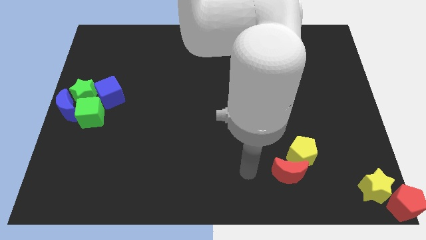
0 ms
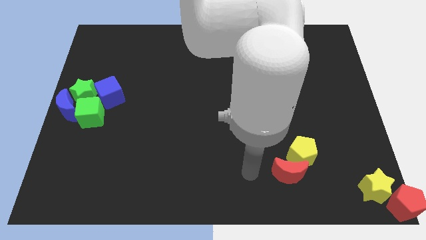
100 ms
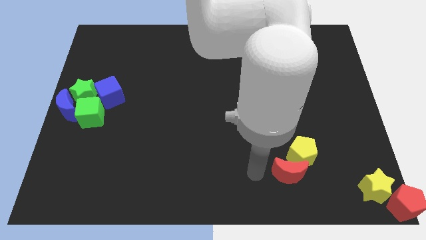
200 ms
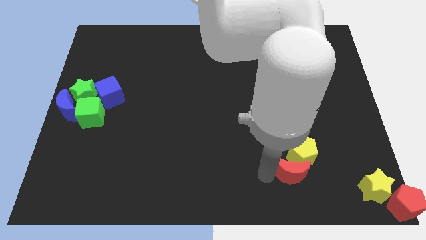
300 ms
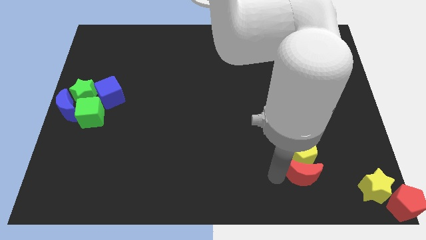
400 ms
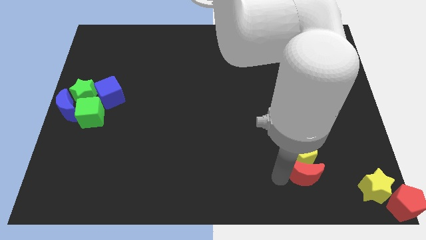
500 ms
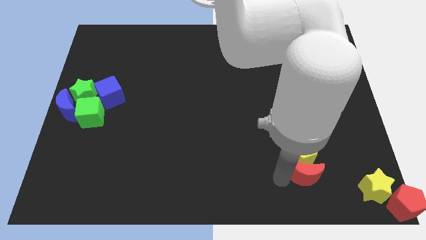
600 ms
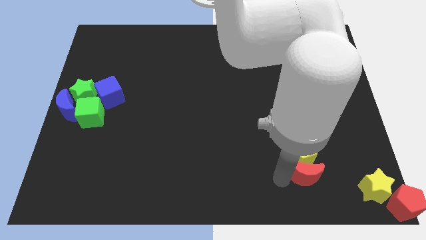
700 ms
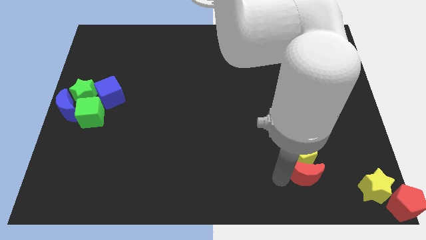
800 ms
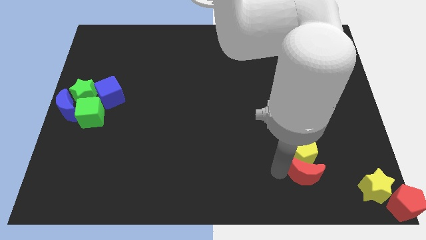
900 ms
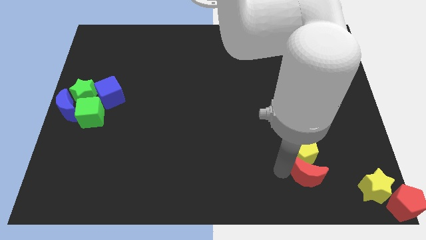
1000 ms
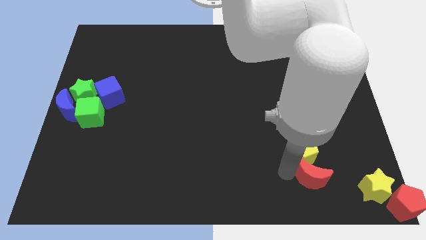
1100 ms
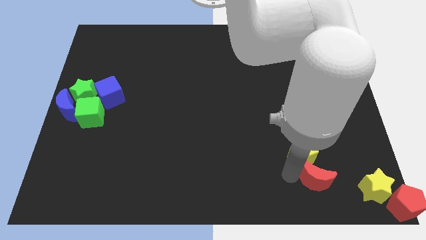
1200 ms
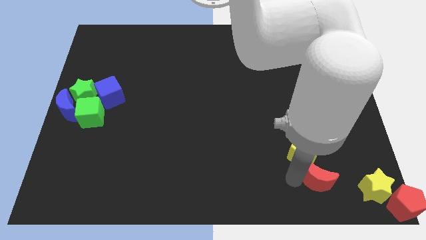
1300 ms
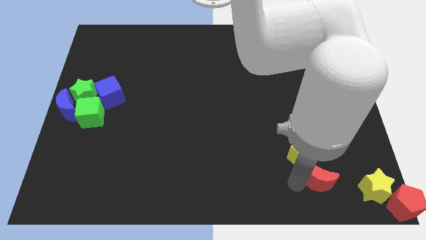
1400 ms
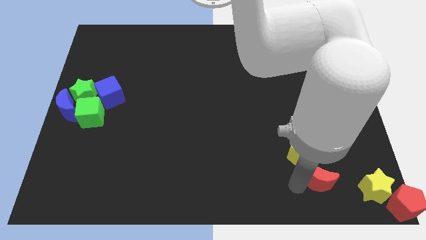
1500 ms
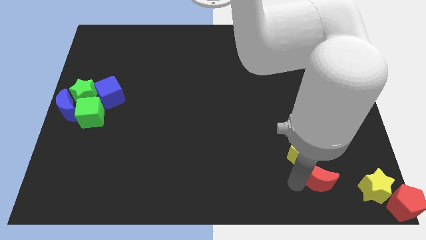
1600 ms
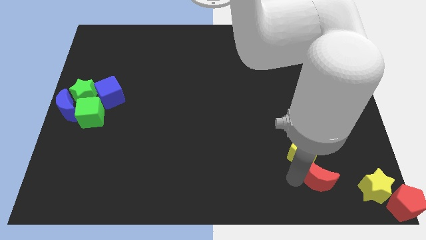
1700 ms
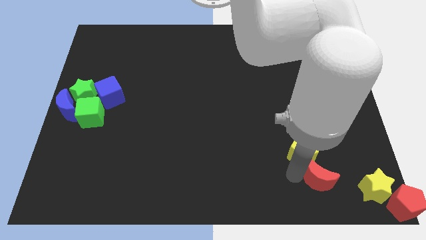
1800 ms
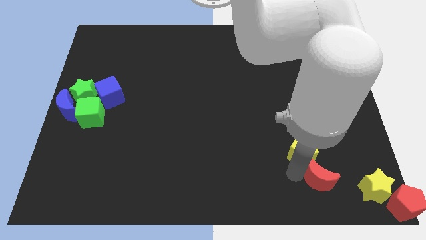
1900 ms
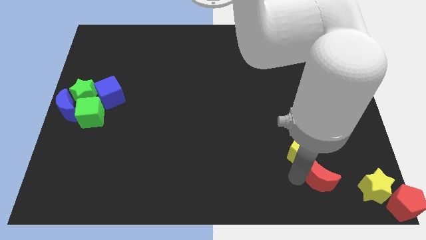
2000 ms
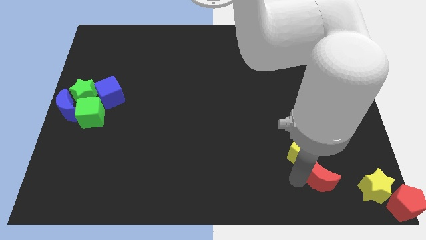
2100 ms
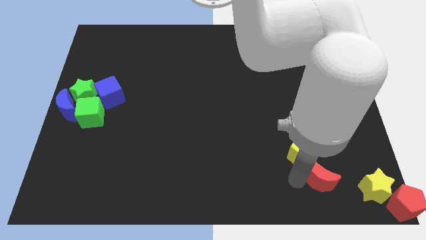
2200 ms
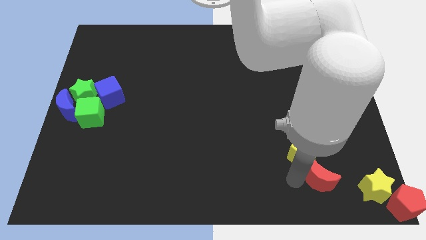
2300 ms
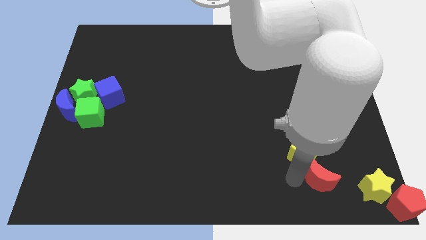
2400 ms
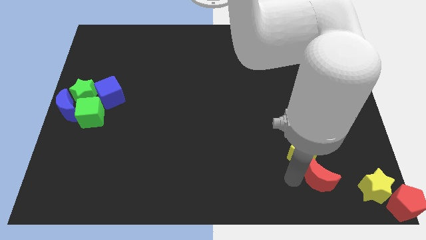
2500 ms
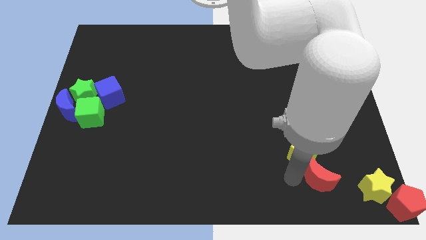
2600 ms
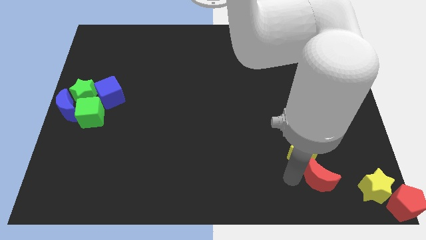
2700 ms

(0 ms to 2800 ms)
move the red crescent towards the yellow star

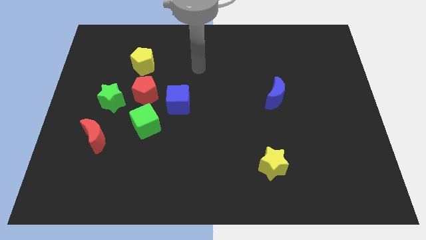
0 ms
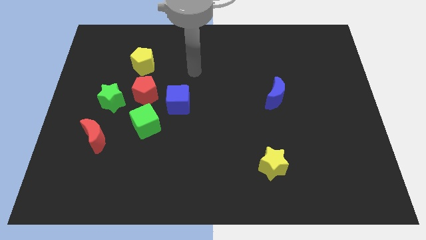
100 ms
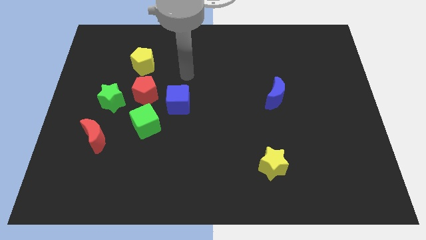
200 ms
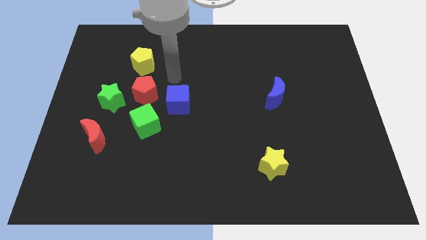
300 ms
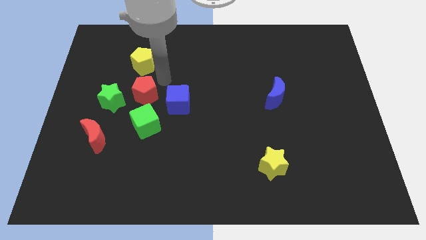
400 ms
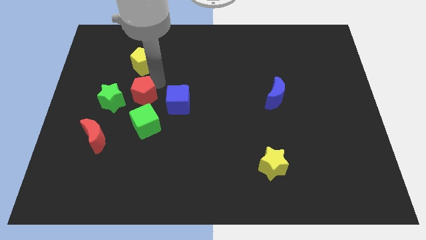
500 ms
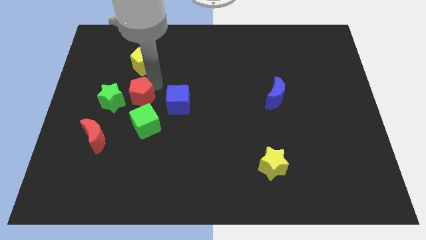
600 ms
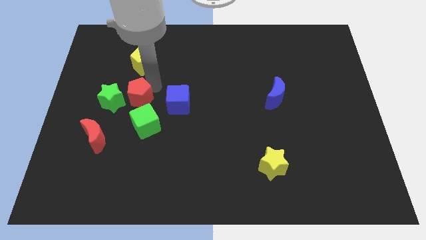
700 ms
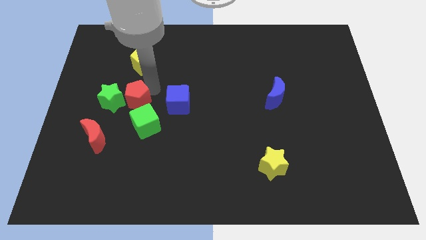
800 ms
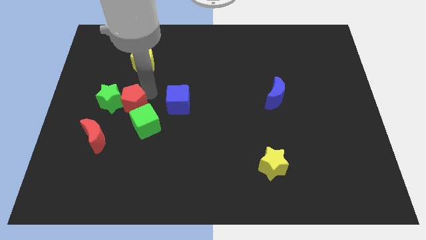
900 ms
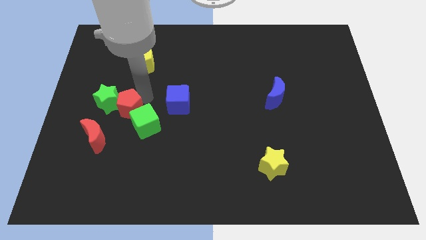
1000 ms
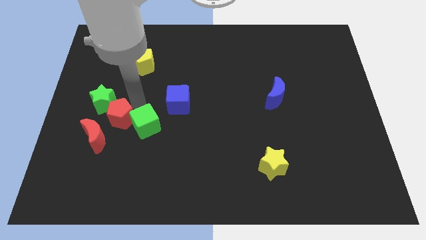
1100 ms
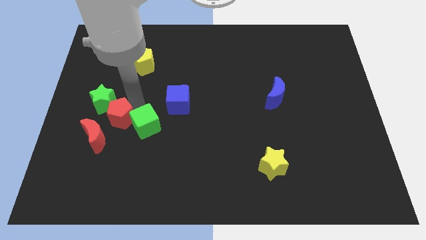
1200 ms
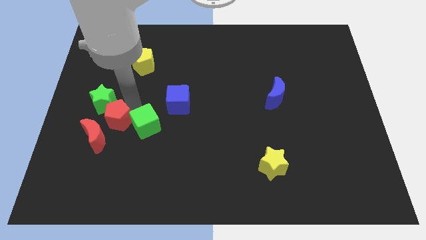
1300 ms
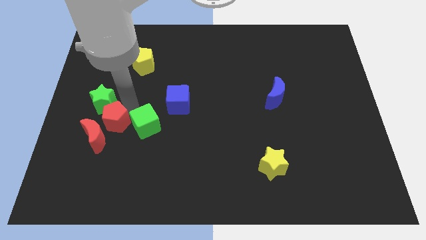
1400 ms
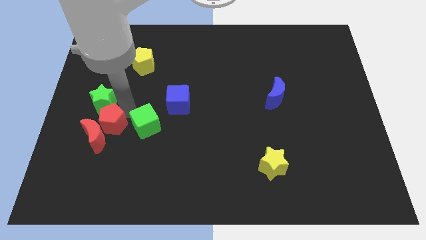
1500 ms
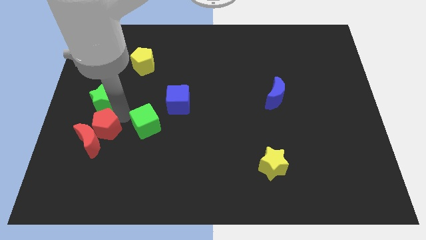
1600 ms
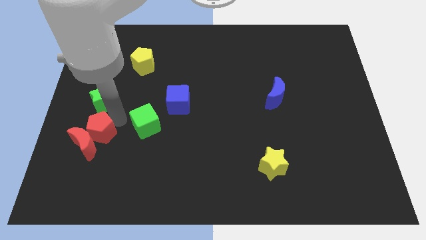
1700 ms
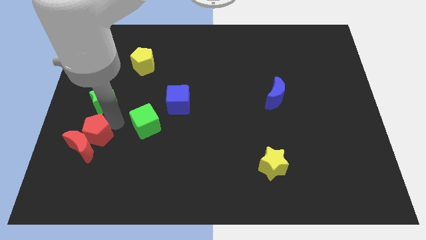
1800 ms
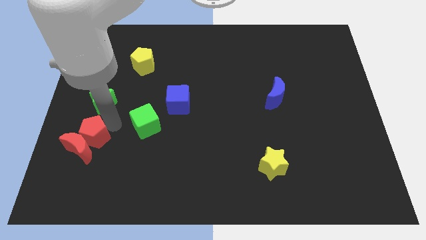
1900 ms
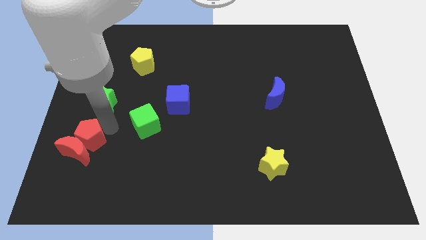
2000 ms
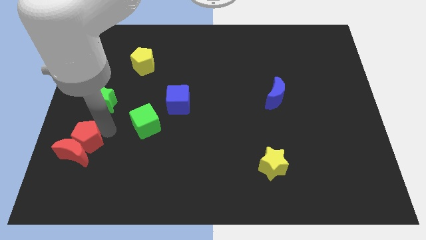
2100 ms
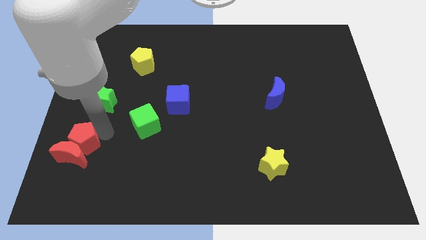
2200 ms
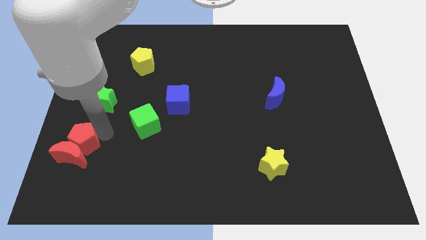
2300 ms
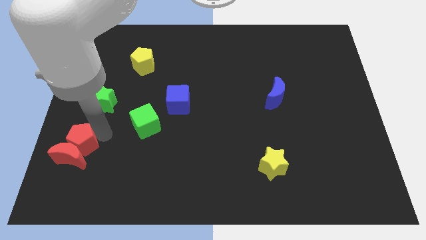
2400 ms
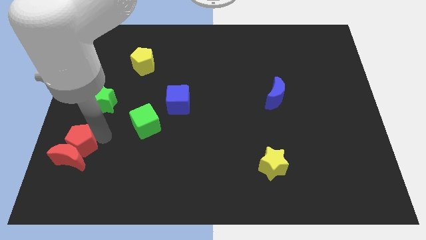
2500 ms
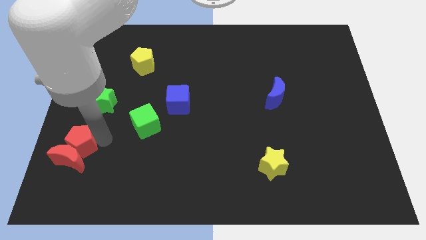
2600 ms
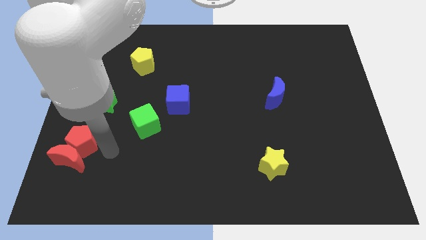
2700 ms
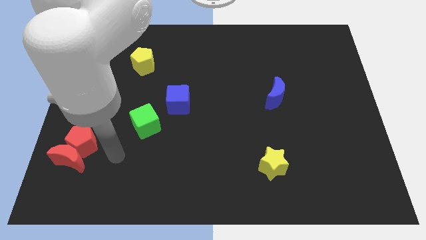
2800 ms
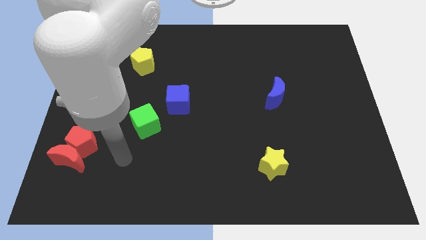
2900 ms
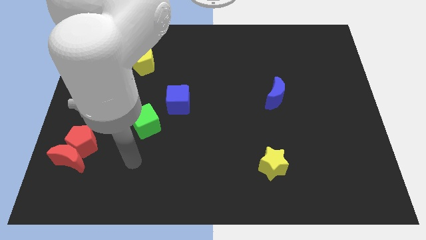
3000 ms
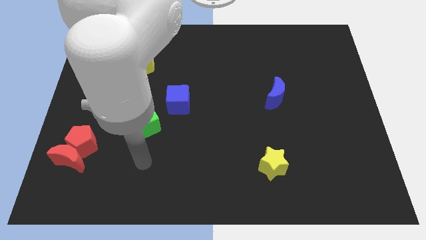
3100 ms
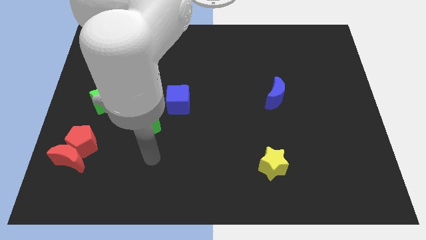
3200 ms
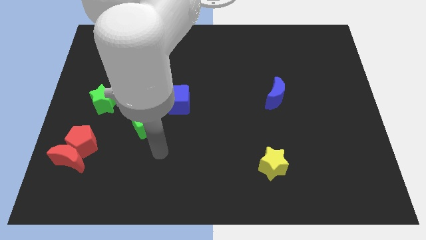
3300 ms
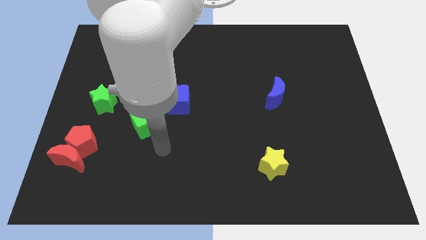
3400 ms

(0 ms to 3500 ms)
move the red blocks to the bottom of the board

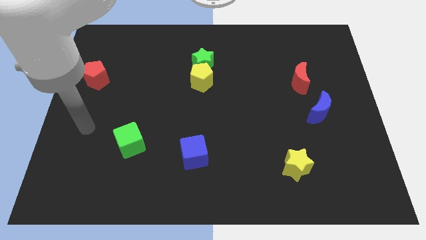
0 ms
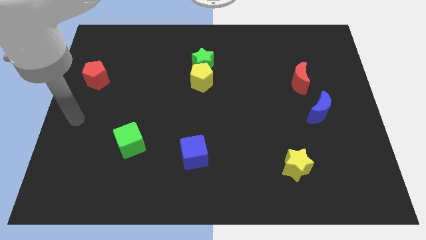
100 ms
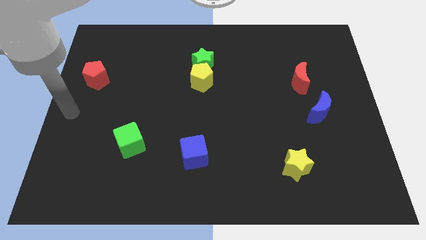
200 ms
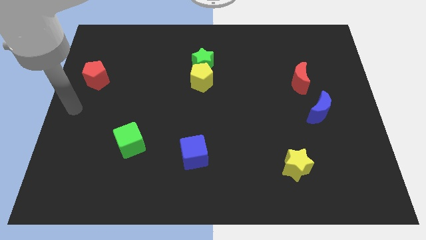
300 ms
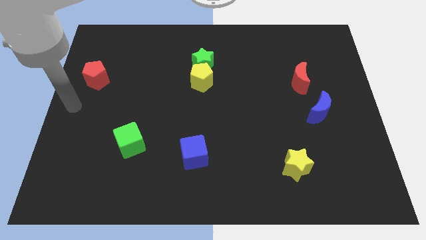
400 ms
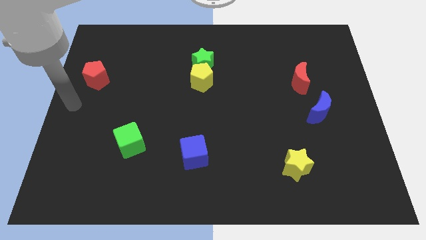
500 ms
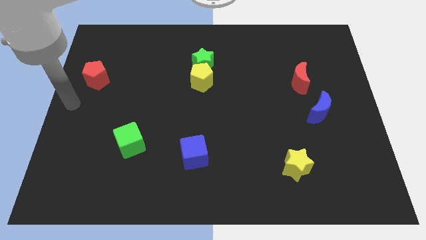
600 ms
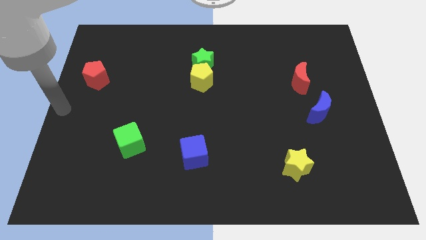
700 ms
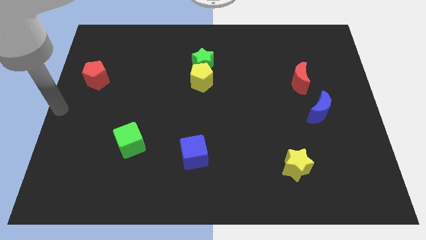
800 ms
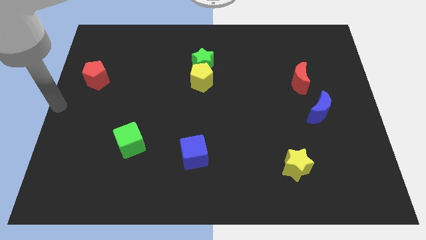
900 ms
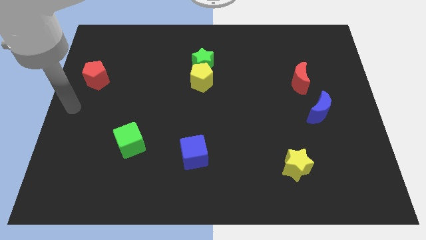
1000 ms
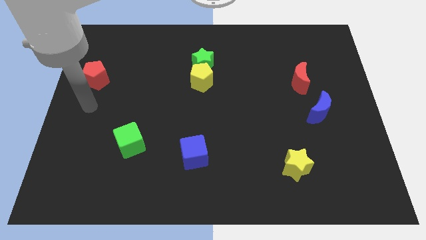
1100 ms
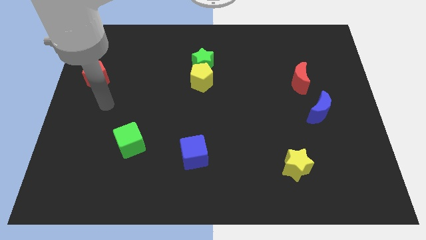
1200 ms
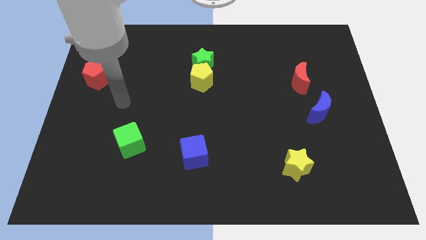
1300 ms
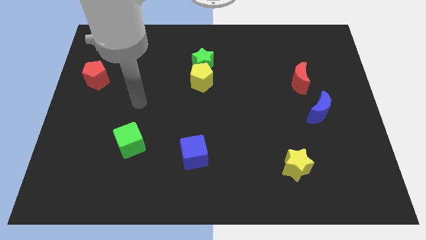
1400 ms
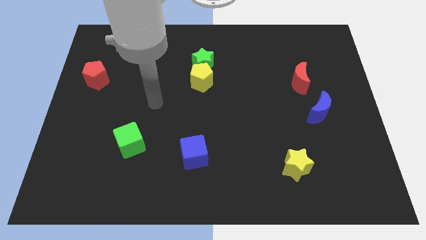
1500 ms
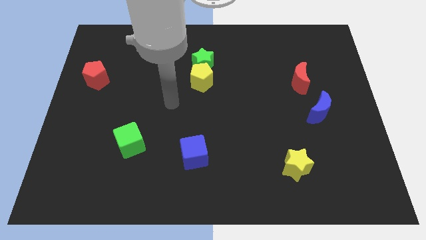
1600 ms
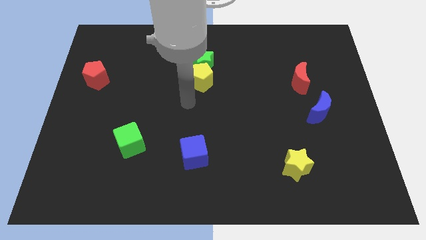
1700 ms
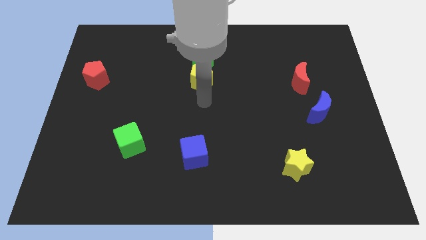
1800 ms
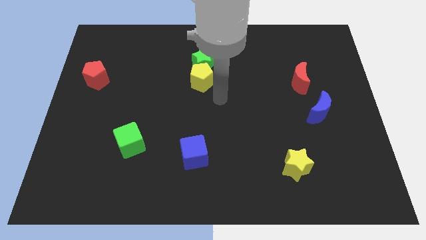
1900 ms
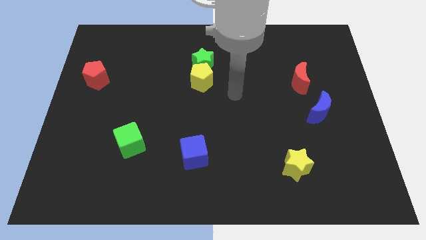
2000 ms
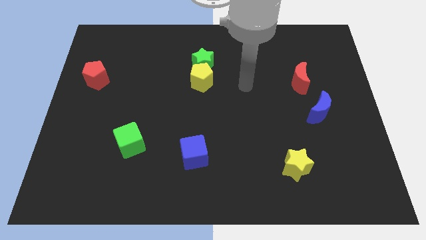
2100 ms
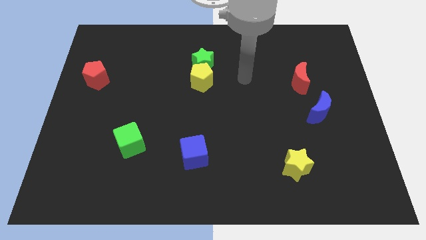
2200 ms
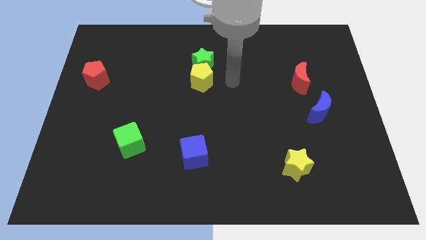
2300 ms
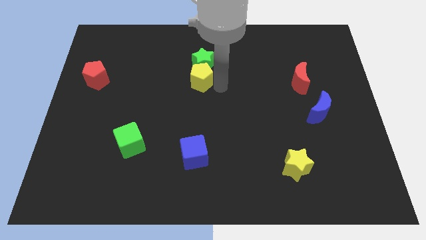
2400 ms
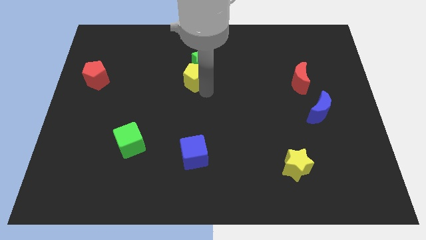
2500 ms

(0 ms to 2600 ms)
push your arm towards the yellow pentagon

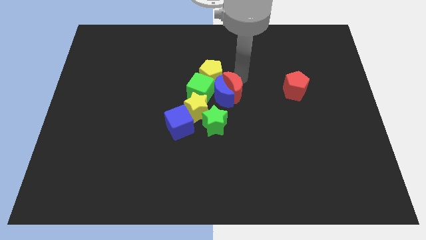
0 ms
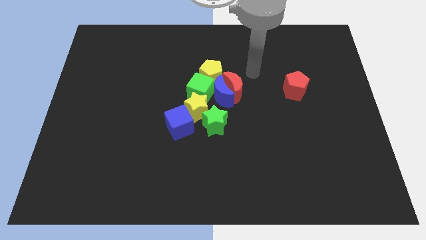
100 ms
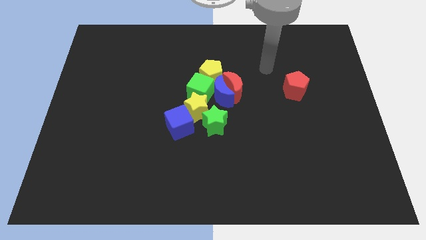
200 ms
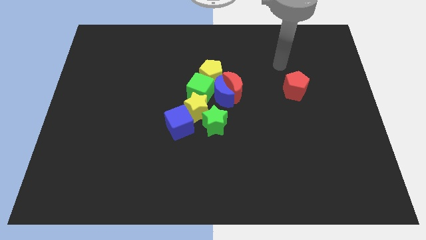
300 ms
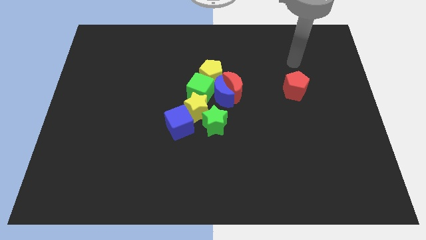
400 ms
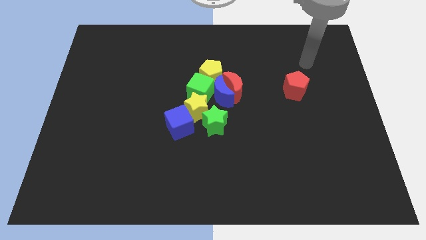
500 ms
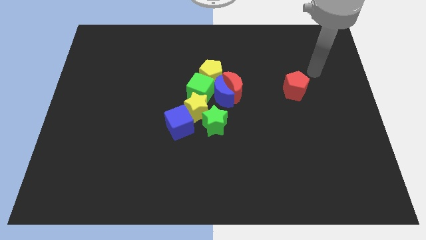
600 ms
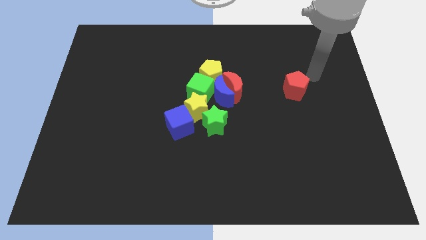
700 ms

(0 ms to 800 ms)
point your arm at the top right side of red pentagon
